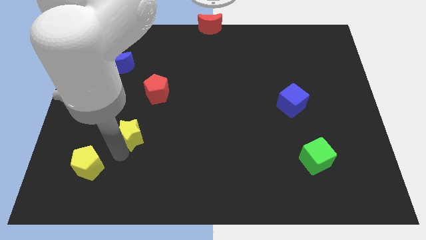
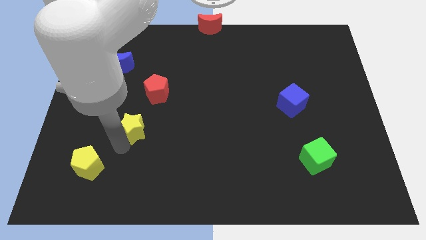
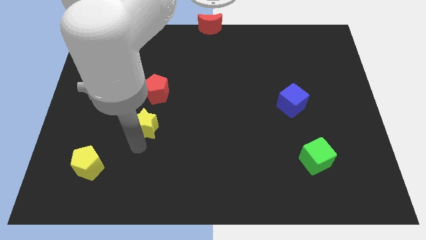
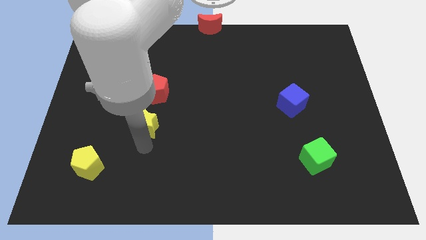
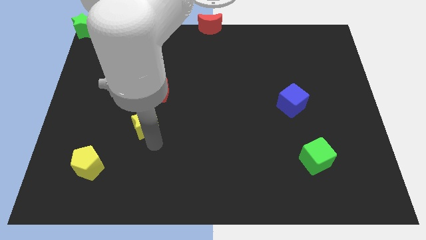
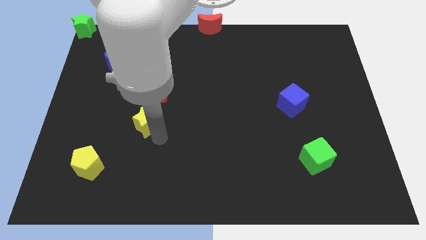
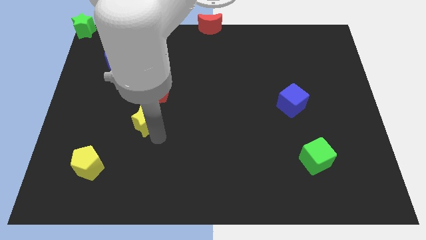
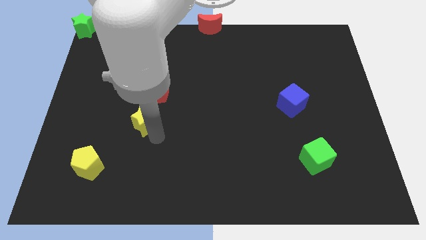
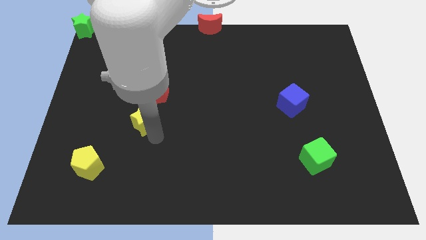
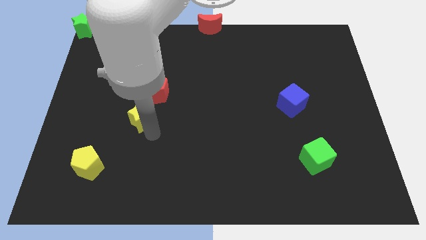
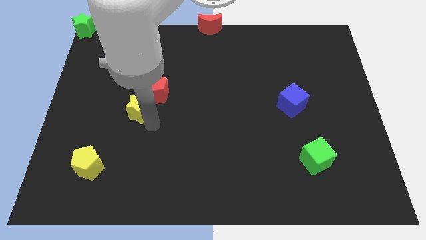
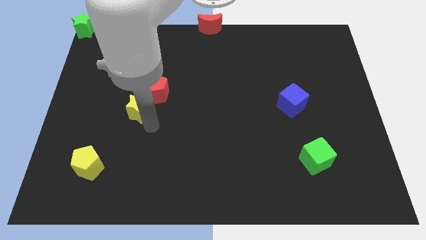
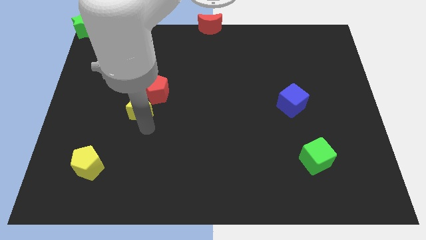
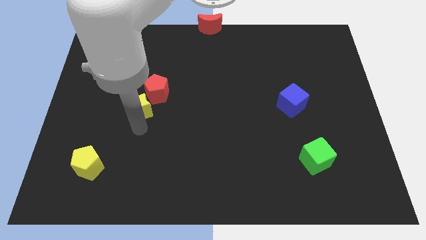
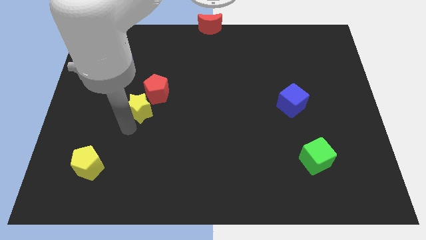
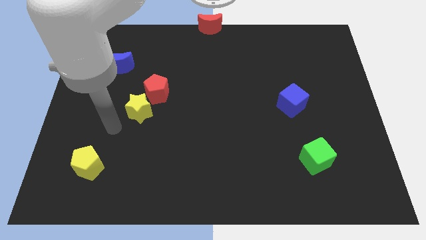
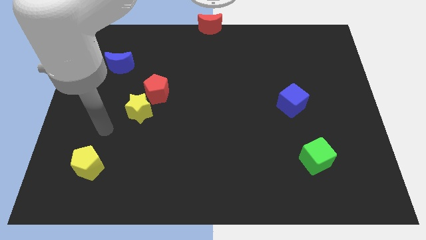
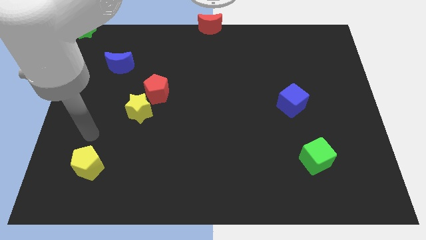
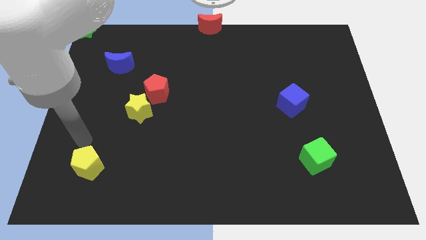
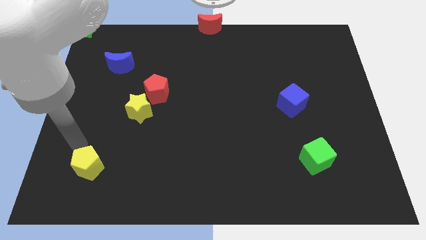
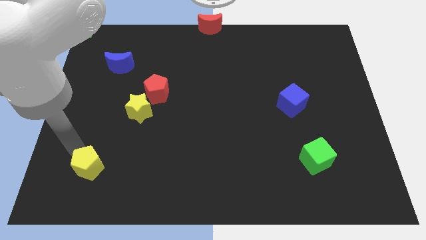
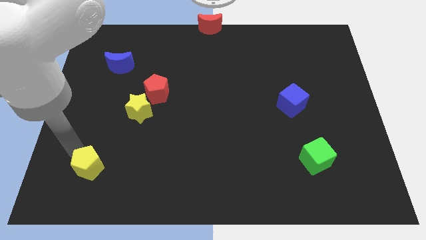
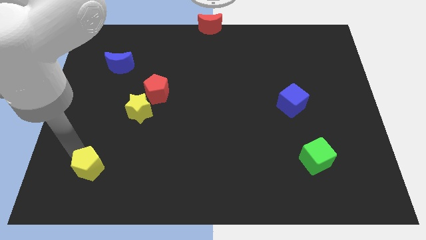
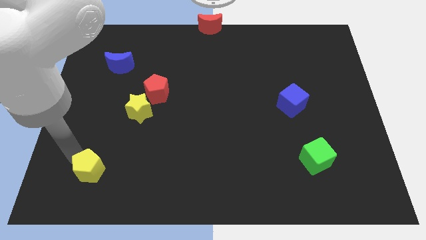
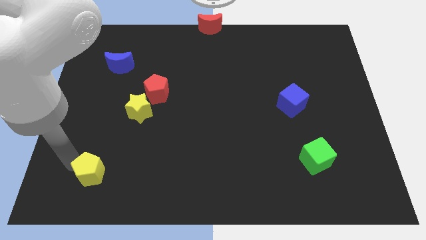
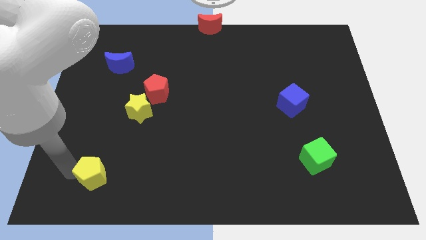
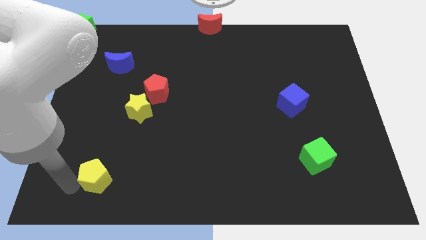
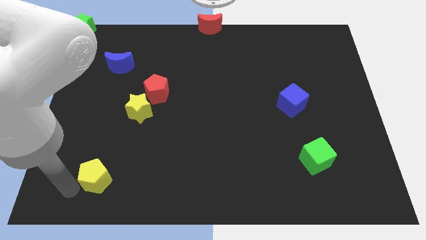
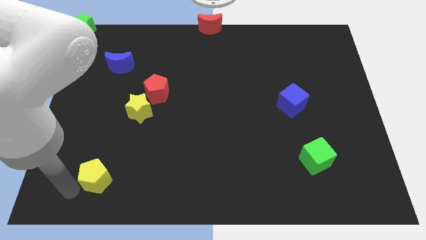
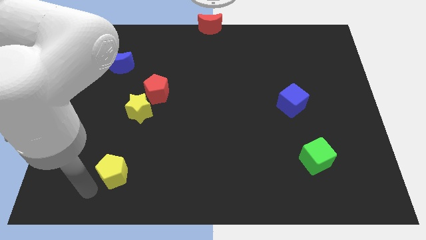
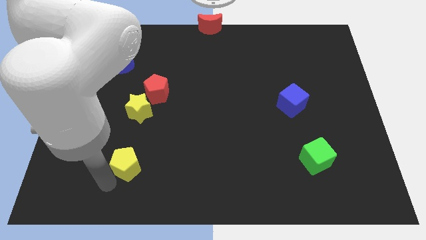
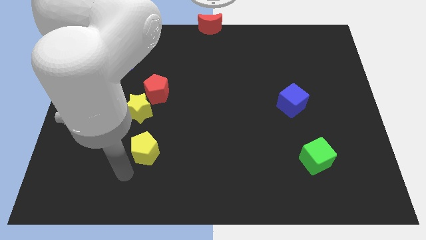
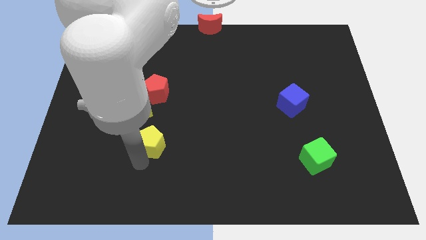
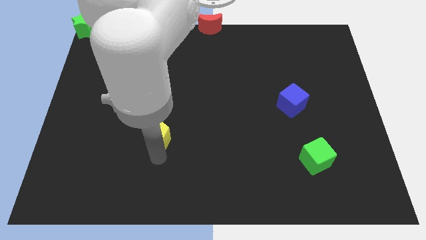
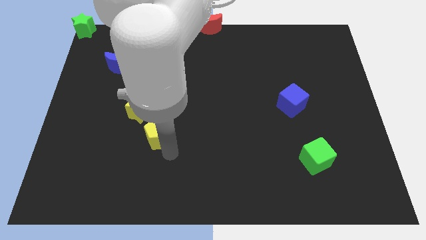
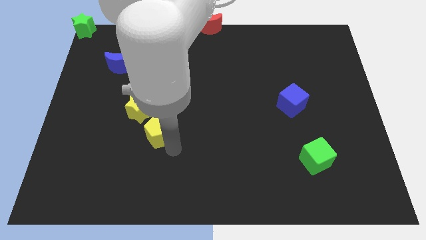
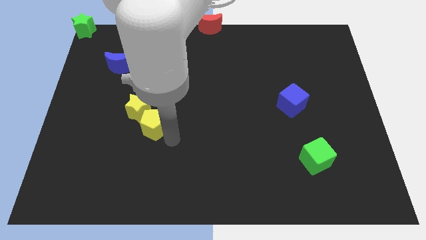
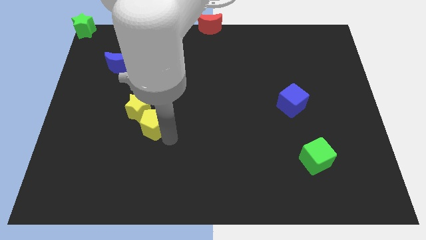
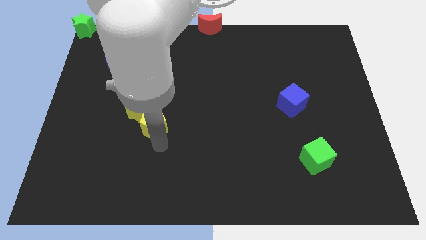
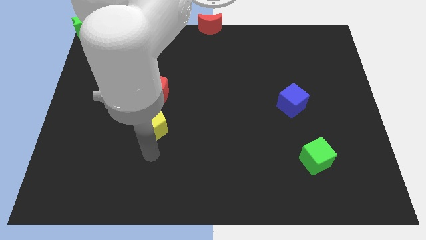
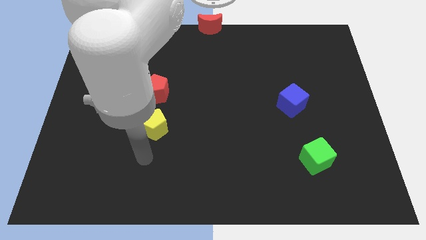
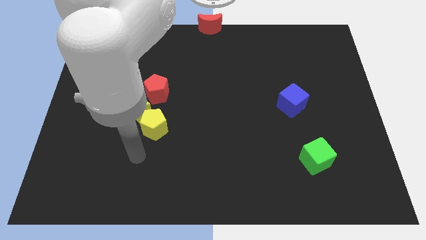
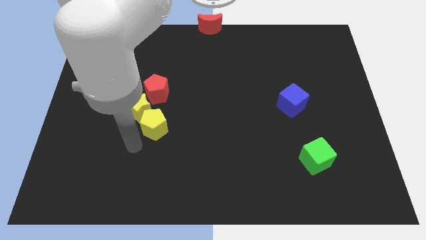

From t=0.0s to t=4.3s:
move yellow pentagon into the yellow star

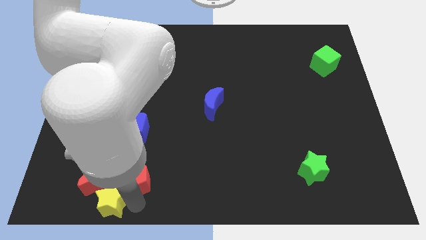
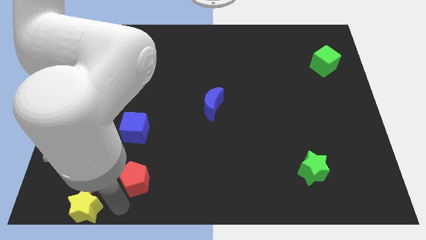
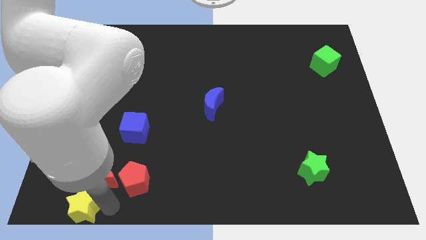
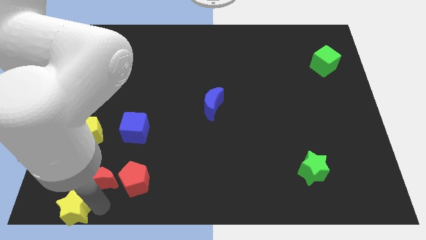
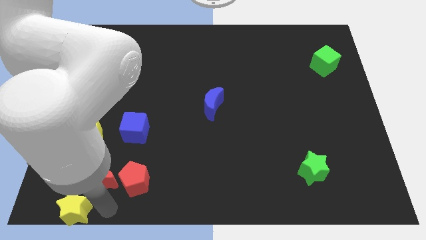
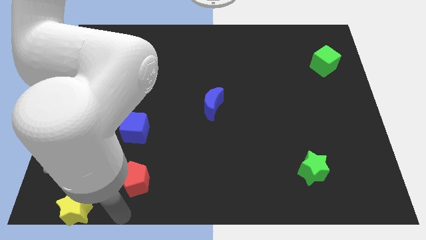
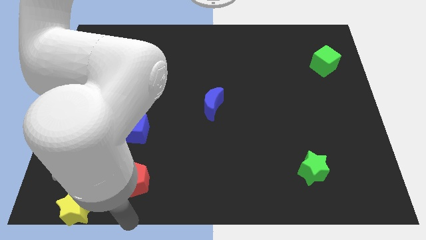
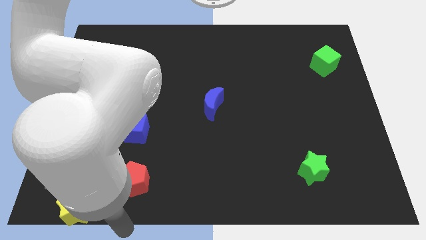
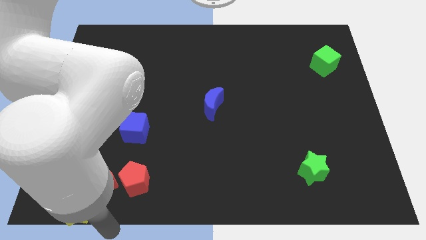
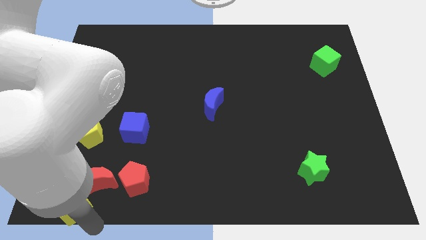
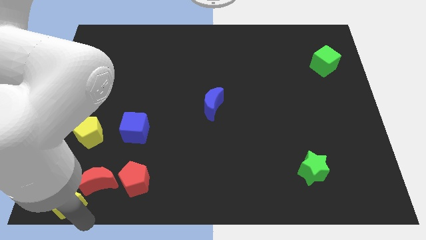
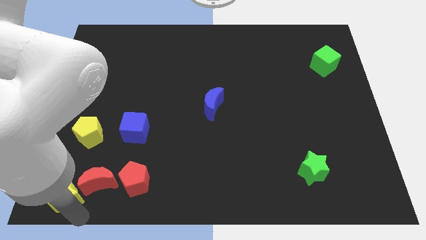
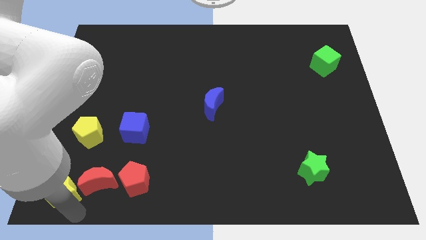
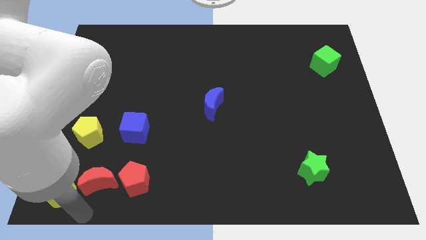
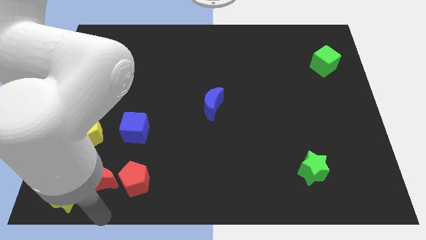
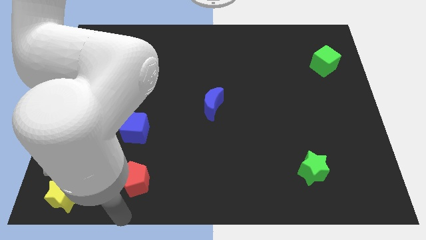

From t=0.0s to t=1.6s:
move the yellow star to the left of the red crescent

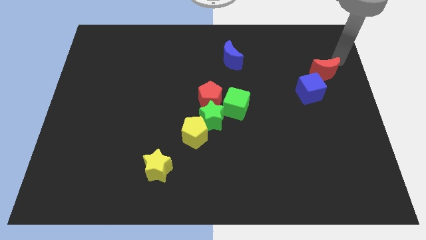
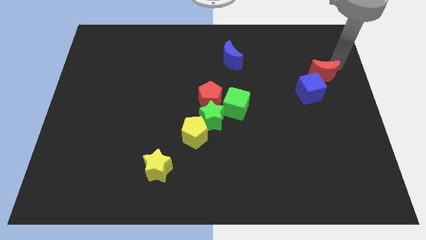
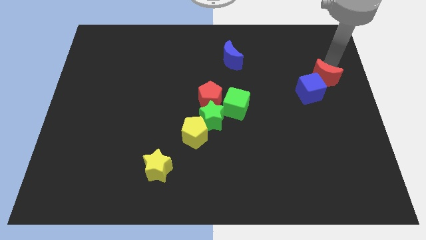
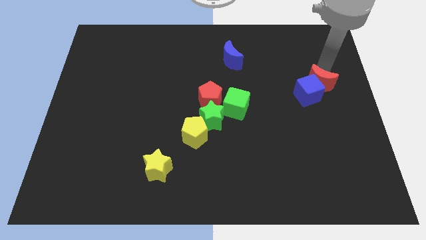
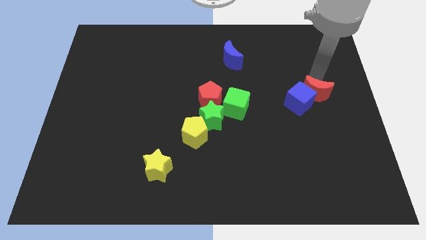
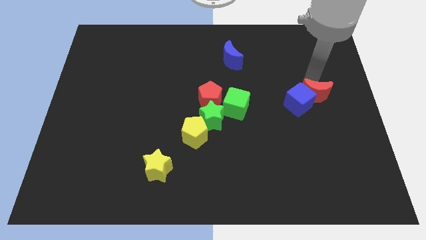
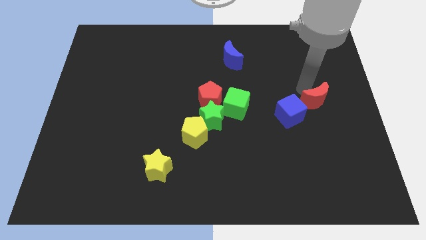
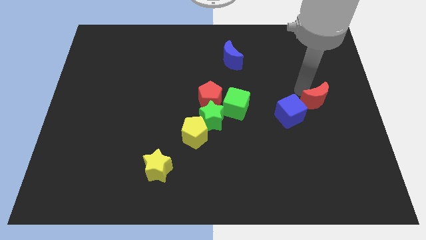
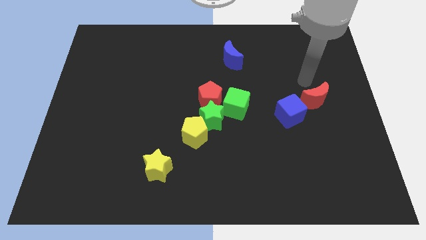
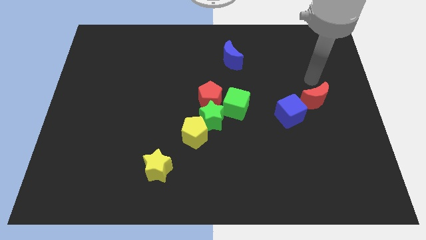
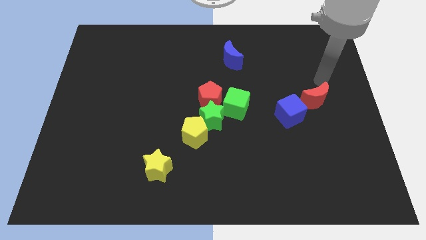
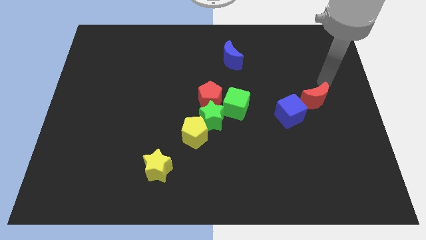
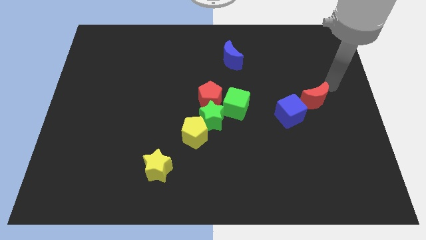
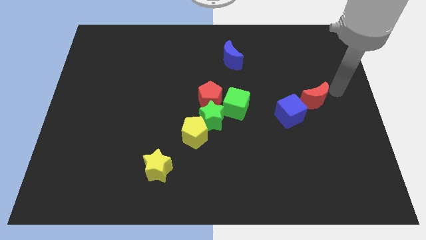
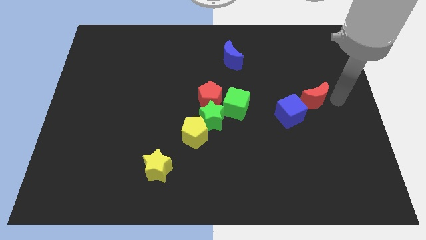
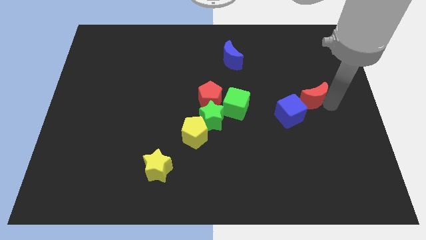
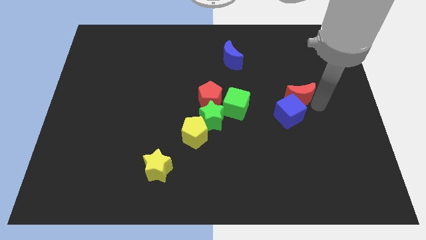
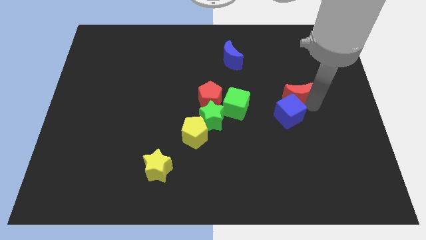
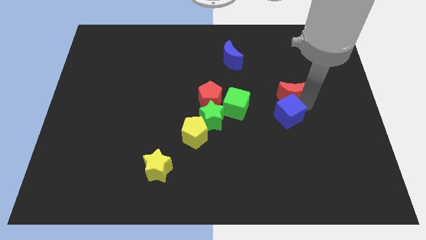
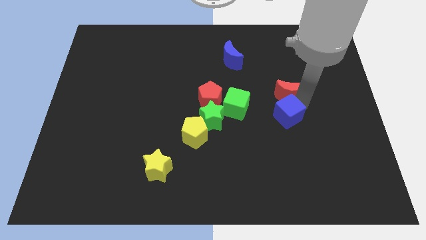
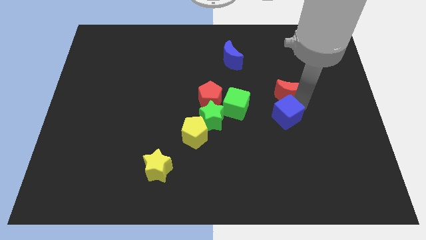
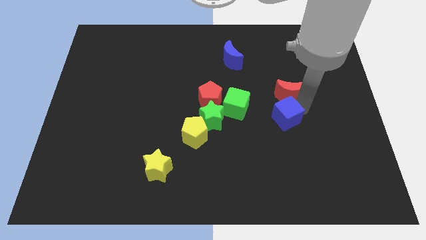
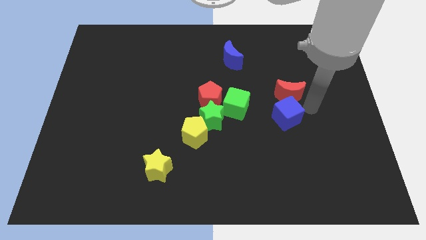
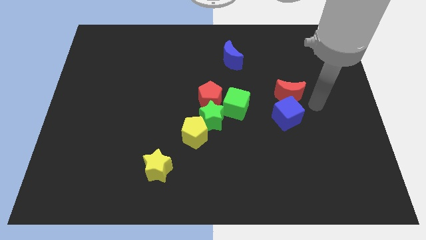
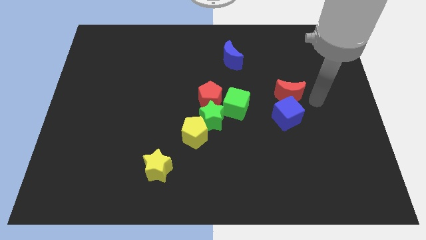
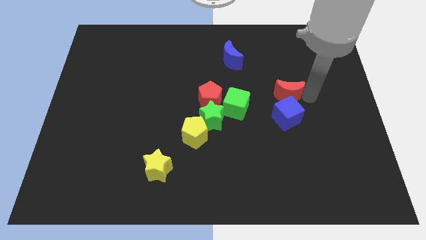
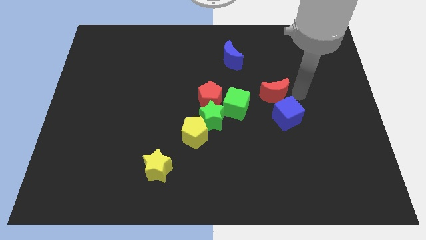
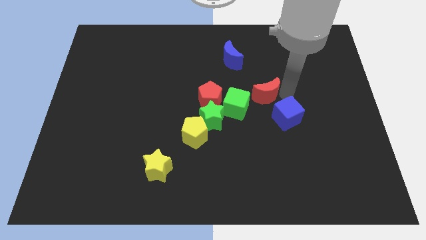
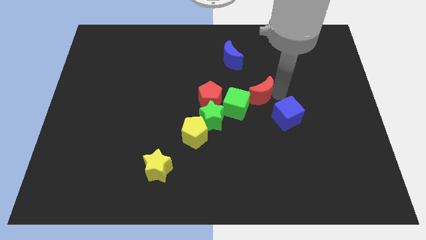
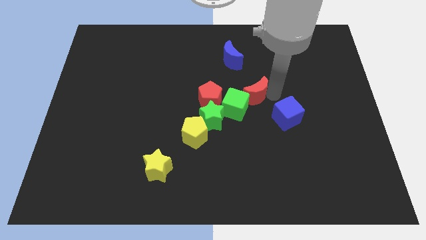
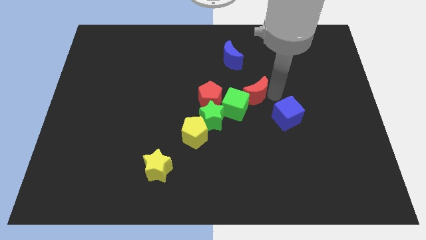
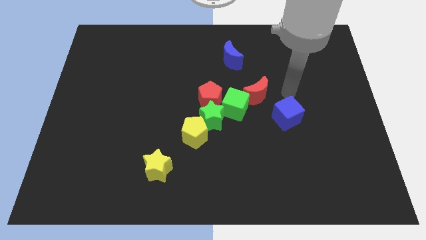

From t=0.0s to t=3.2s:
place the red moon above the green cube
